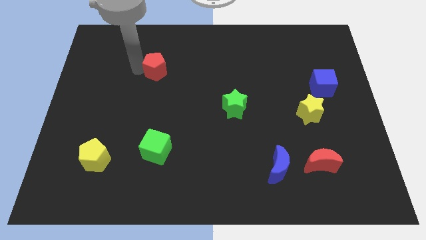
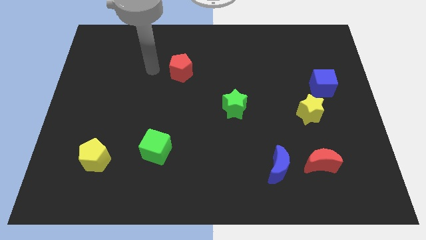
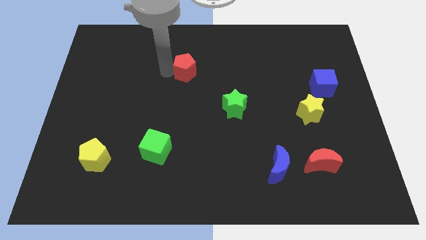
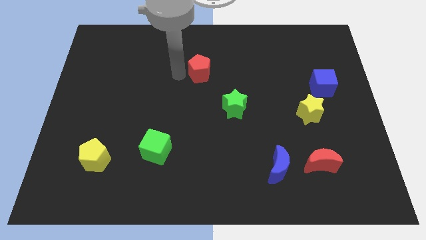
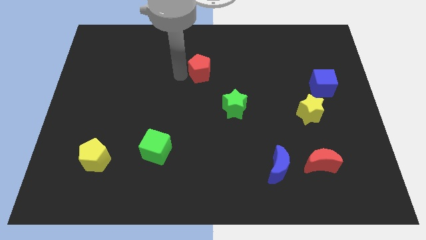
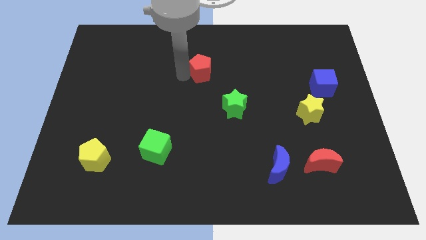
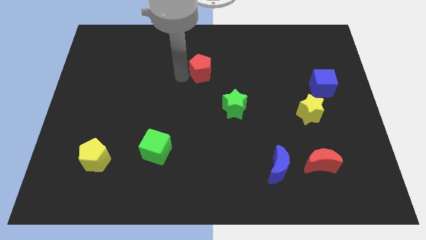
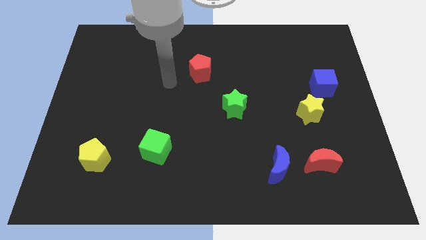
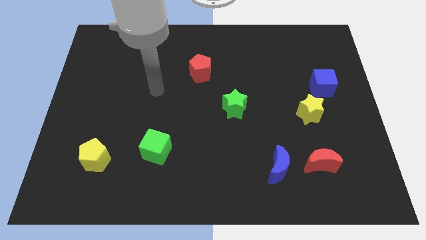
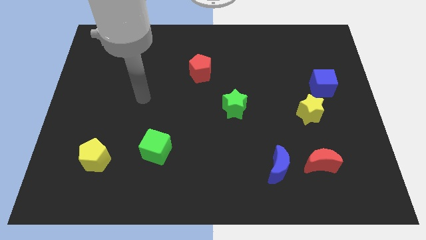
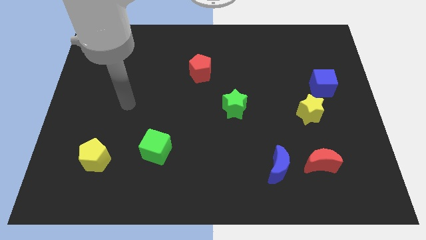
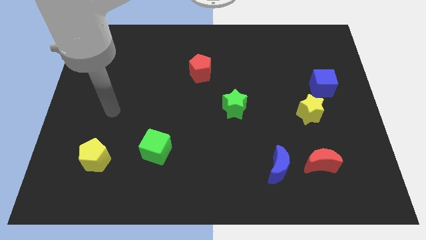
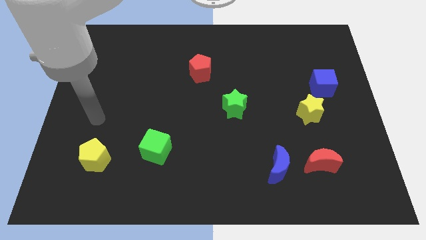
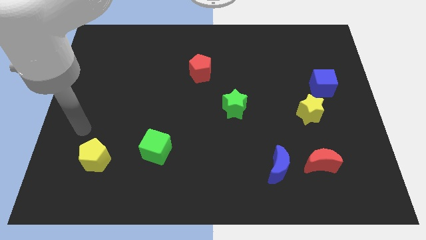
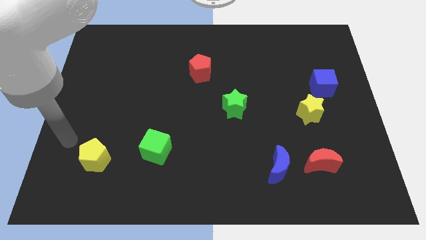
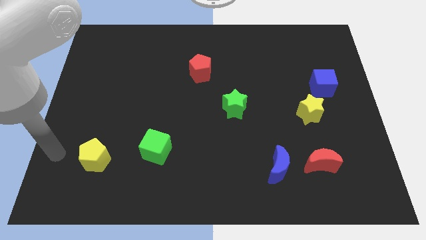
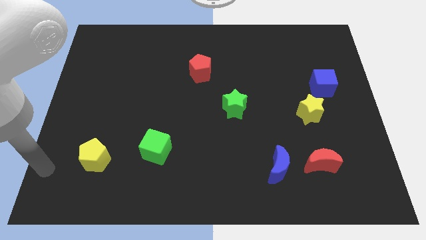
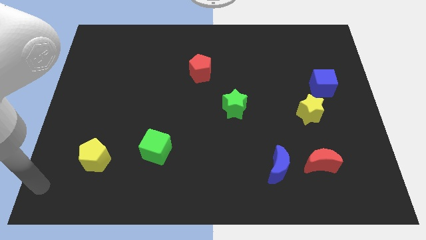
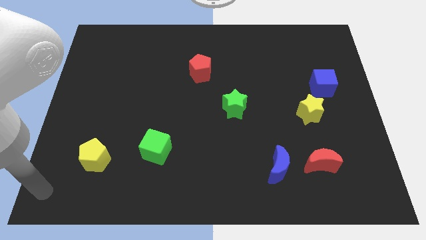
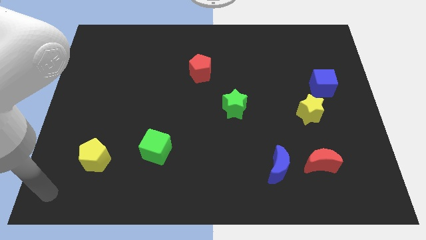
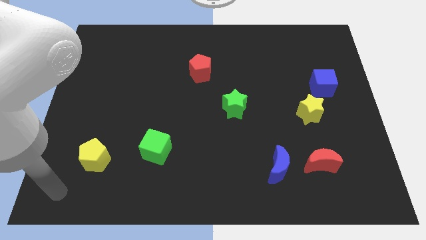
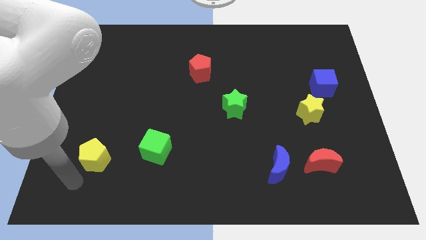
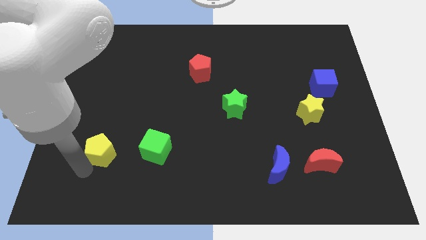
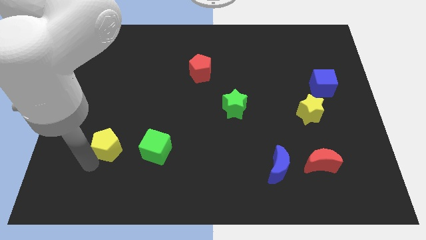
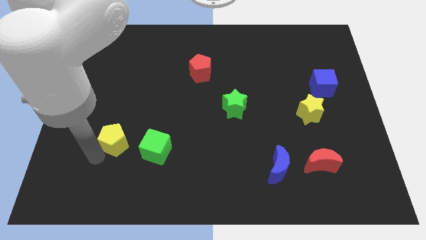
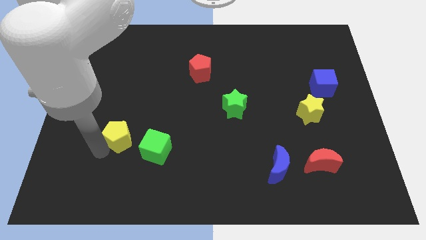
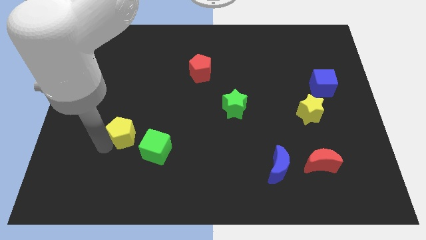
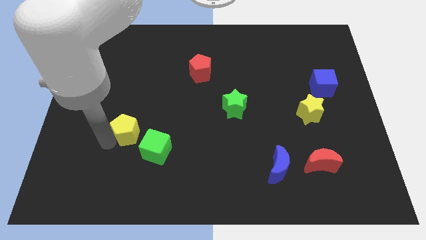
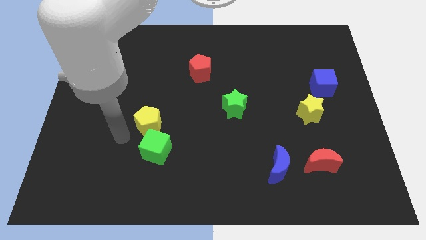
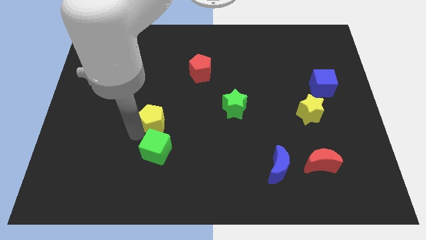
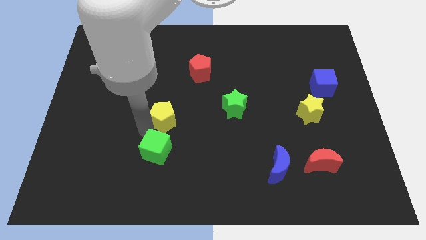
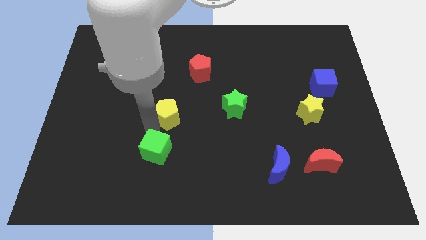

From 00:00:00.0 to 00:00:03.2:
put both the pentagons diagonal to each other

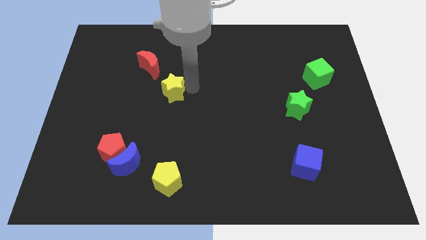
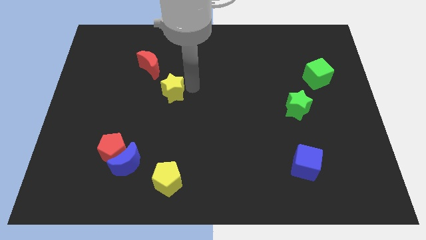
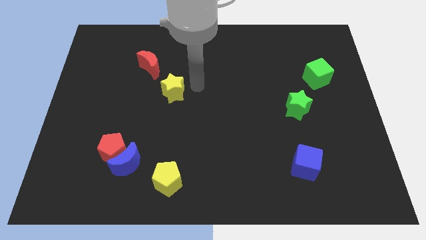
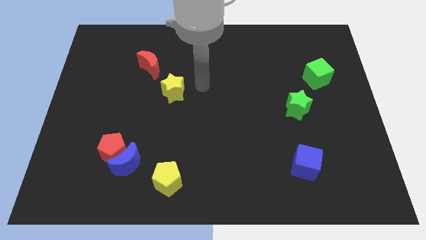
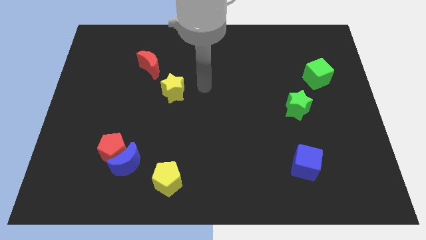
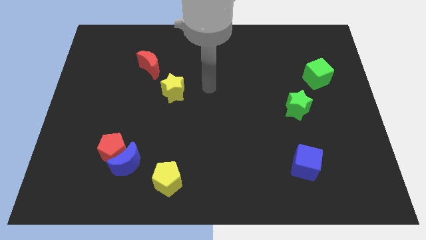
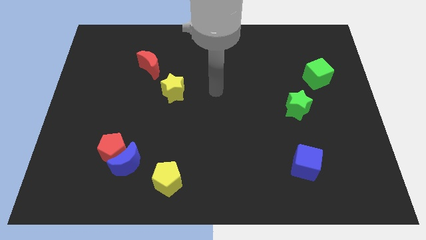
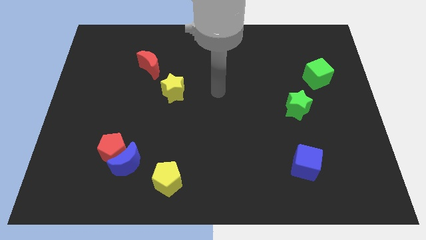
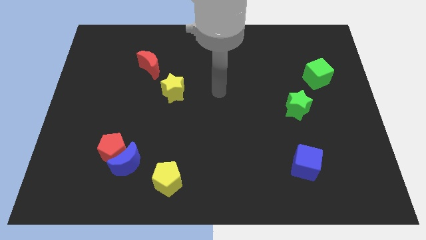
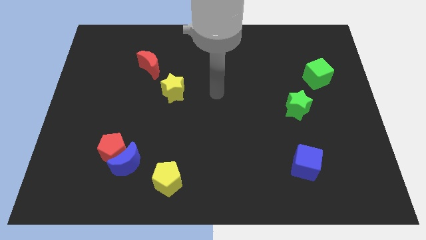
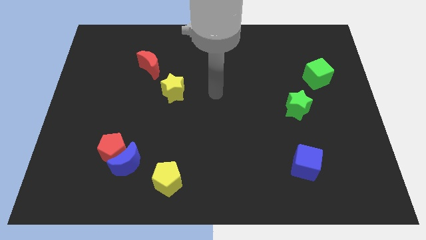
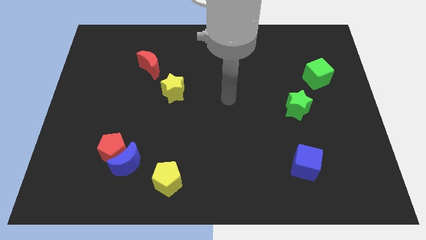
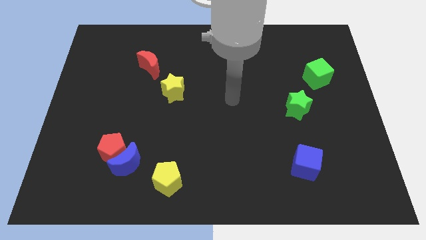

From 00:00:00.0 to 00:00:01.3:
place your arm to the center of the board

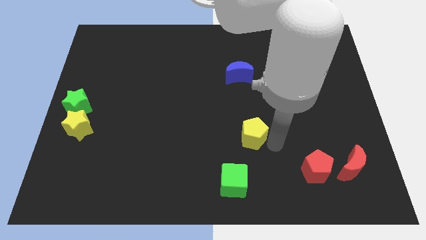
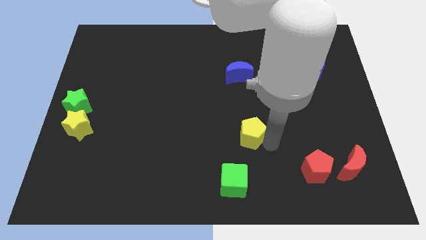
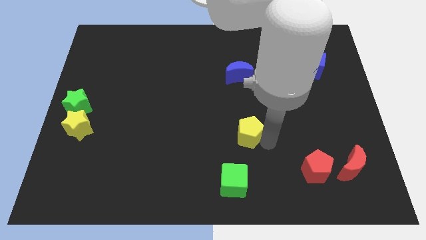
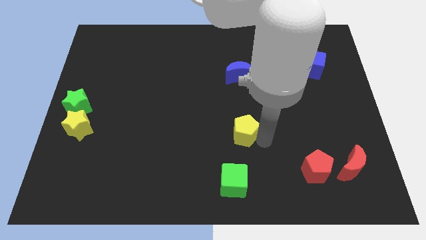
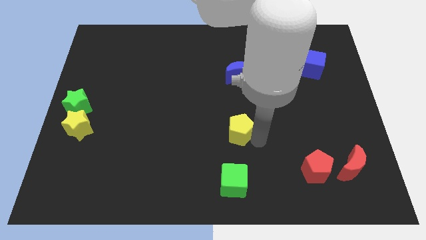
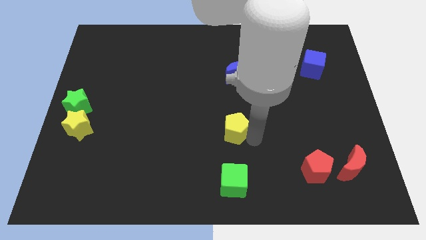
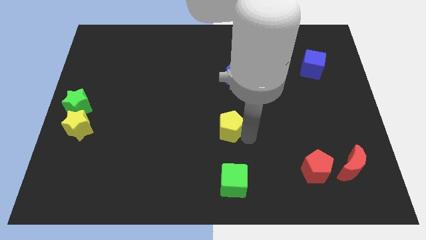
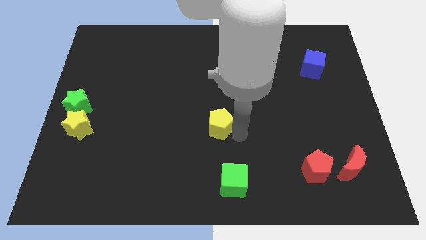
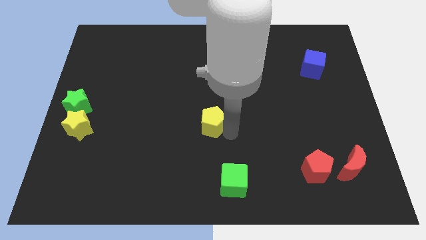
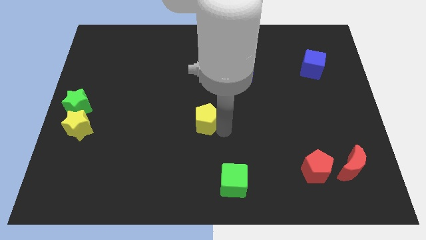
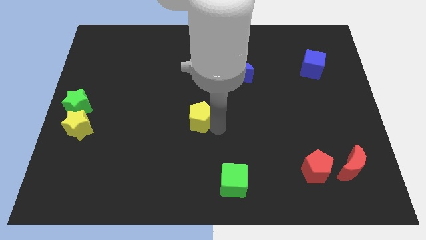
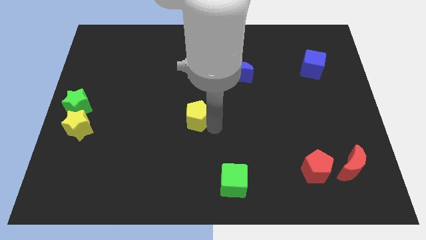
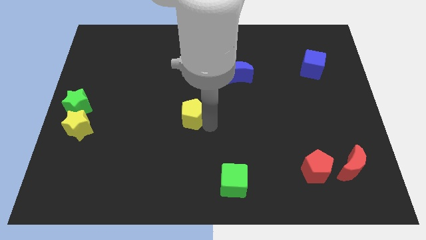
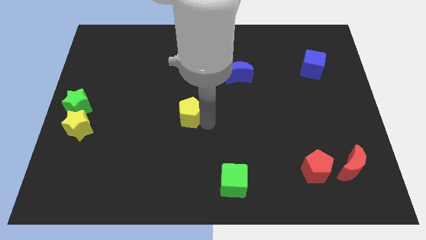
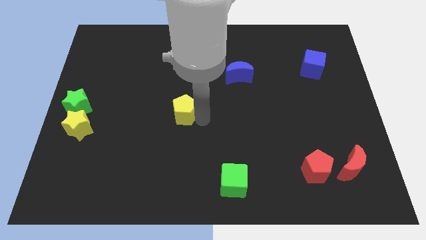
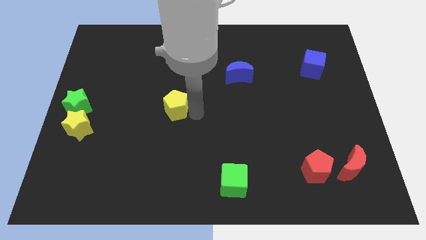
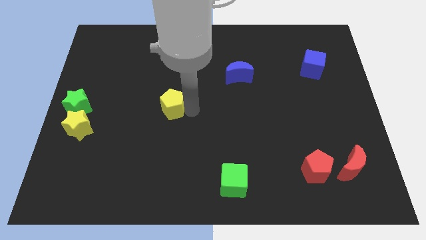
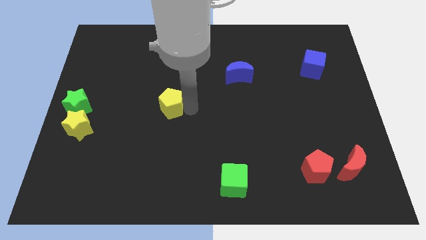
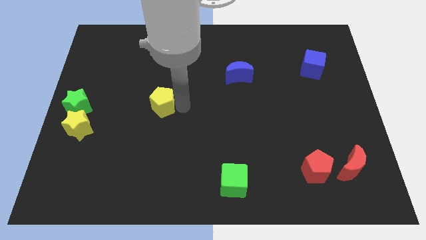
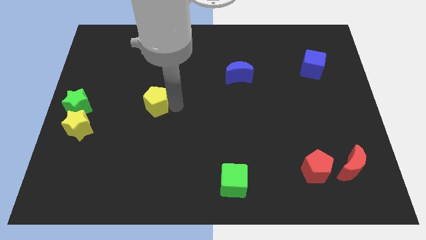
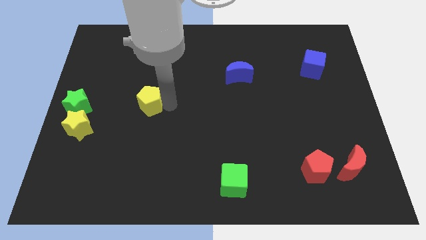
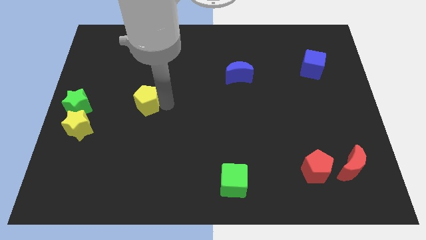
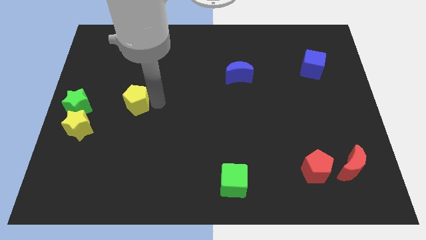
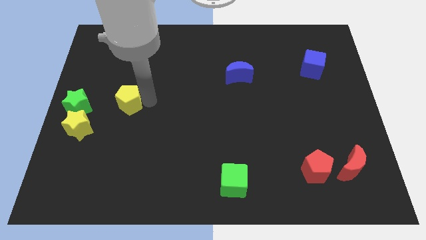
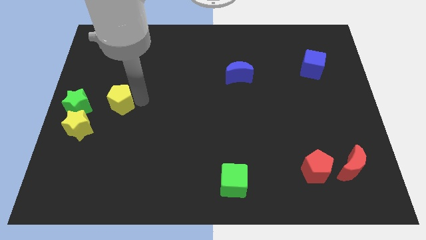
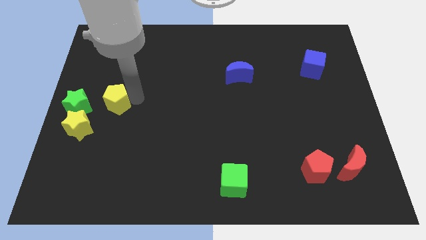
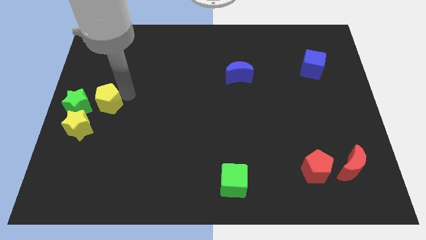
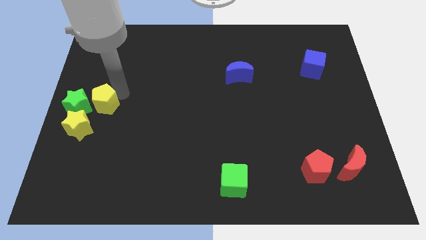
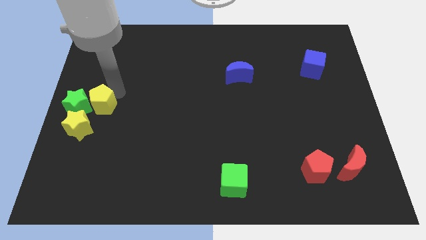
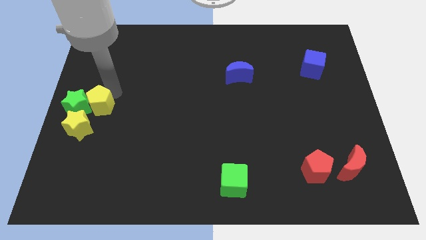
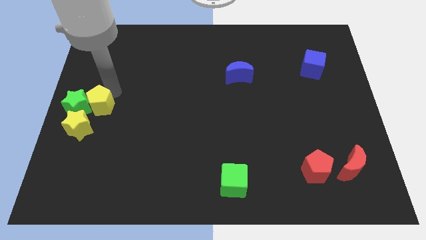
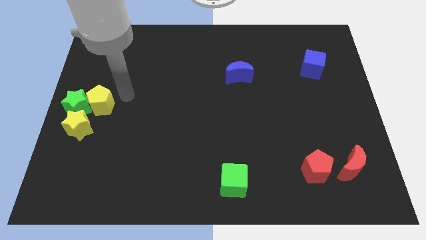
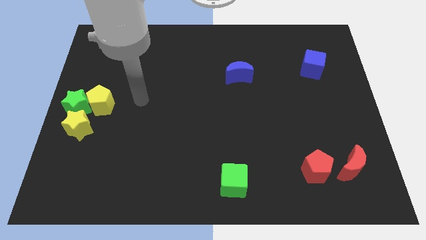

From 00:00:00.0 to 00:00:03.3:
push the yellow pentagon to the right of the green star

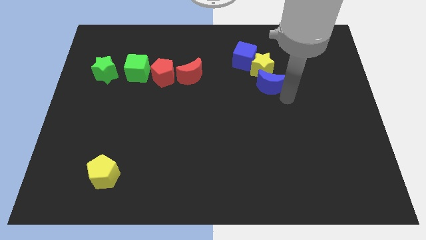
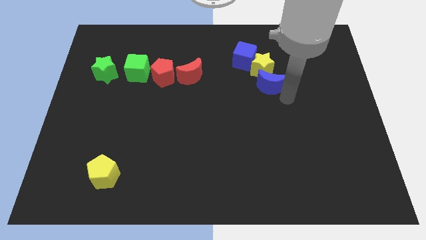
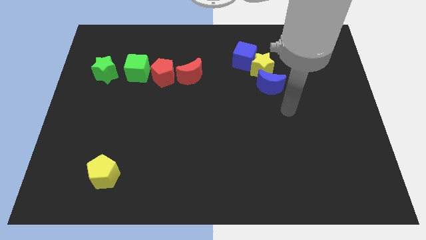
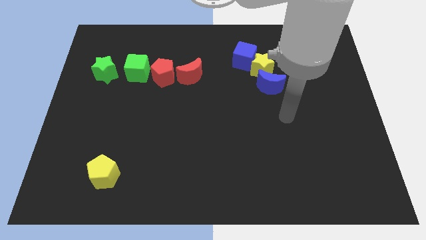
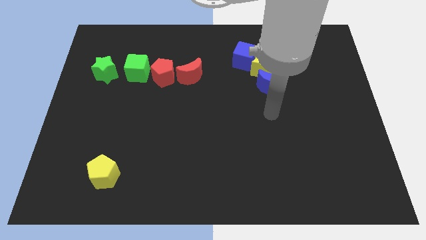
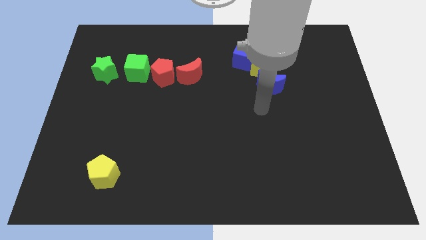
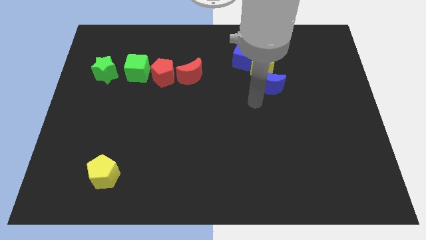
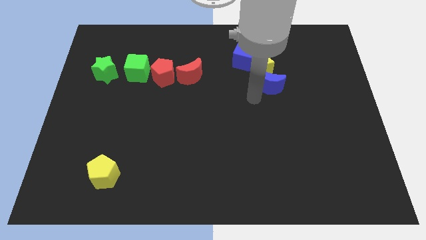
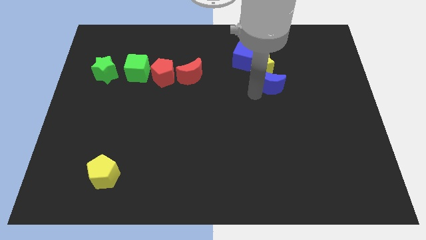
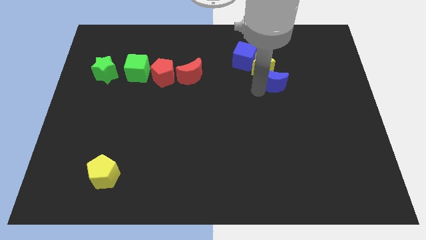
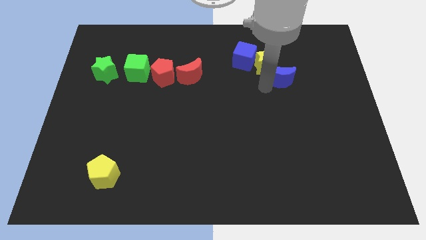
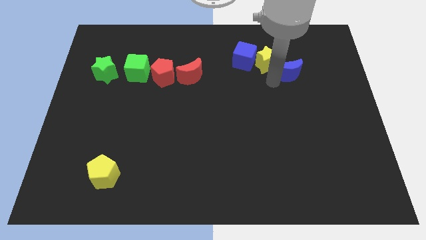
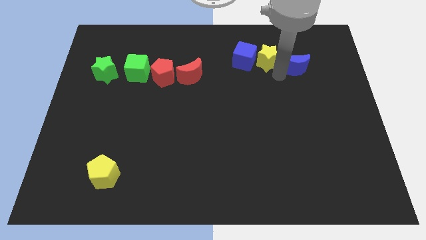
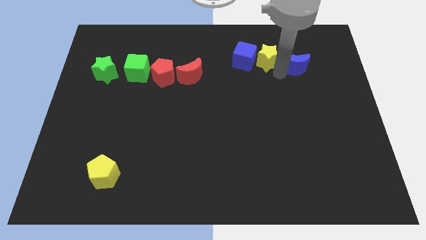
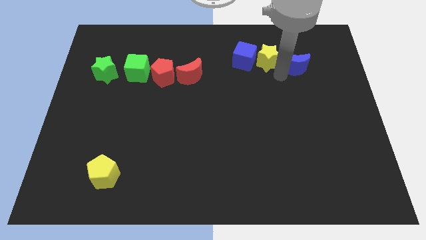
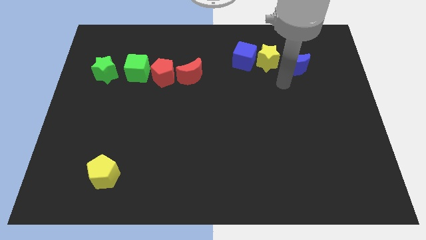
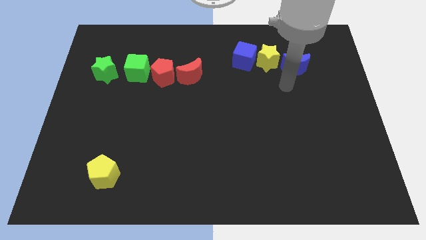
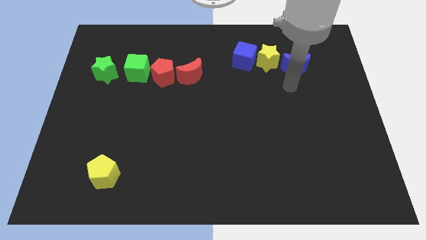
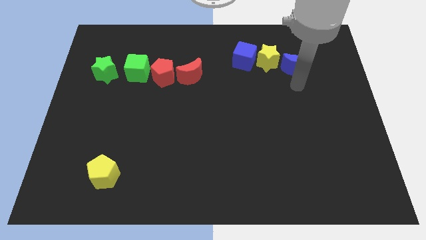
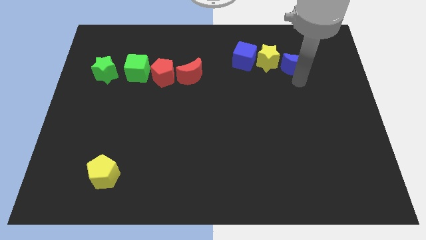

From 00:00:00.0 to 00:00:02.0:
place the blue crescent at the right side of the yellow star
